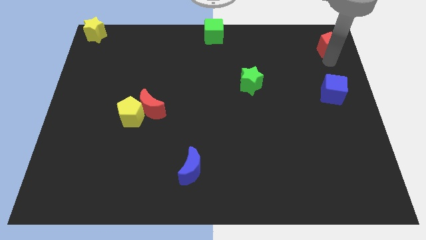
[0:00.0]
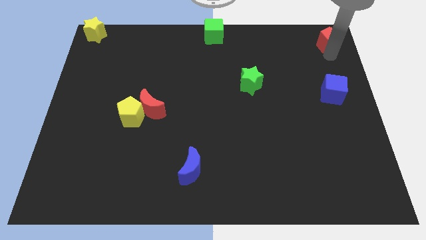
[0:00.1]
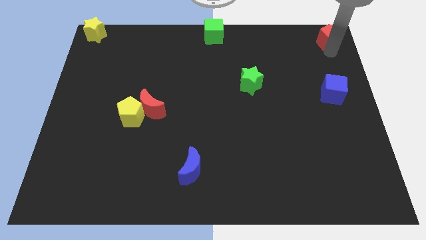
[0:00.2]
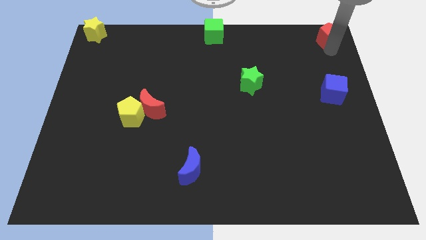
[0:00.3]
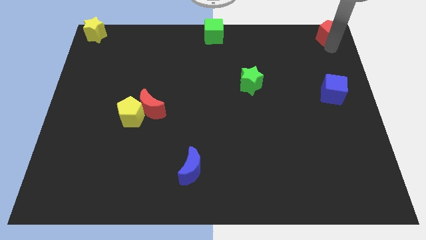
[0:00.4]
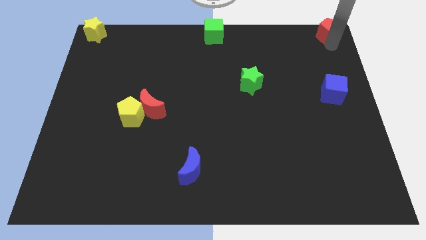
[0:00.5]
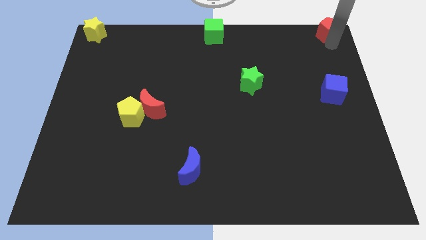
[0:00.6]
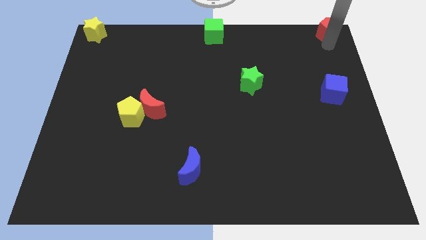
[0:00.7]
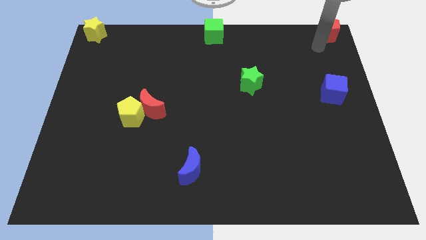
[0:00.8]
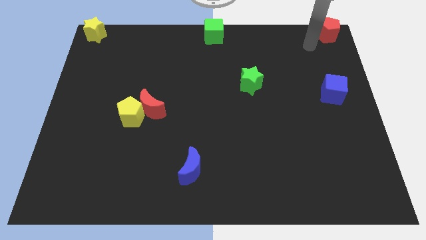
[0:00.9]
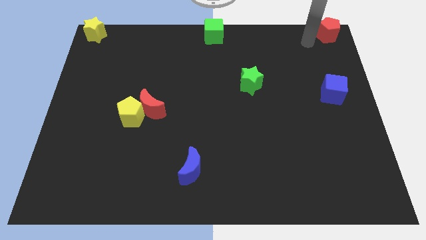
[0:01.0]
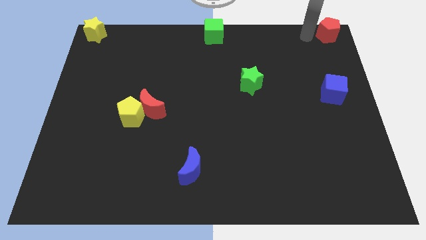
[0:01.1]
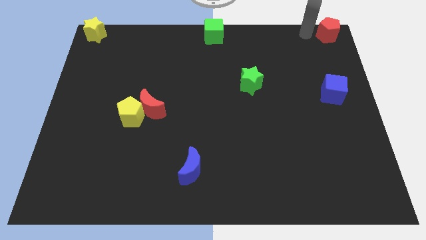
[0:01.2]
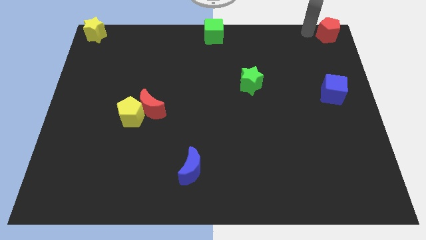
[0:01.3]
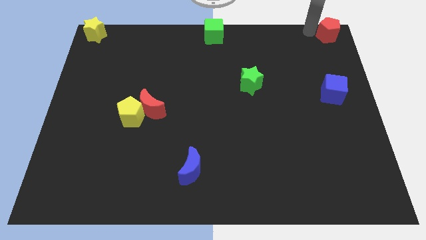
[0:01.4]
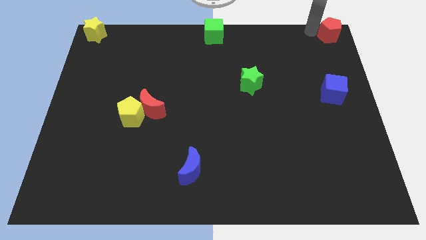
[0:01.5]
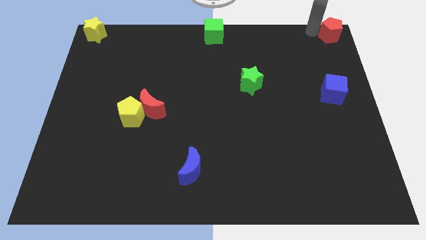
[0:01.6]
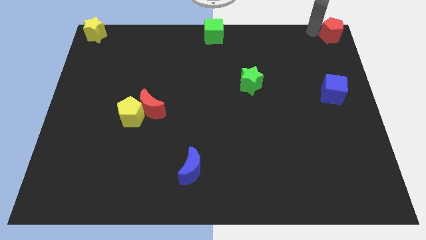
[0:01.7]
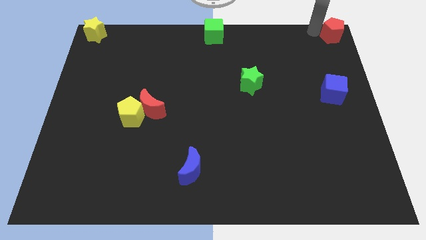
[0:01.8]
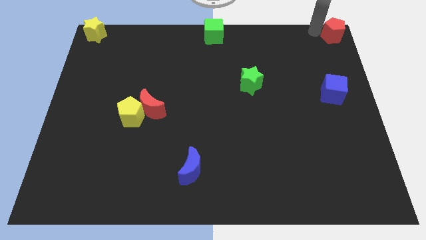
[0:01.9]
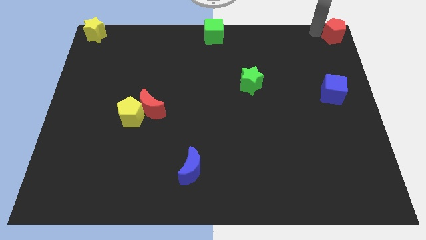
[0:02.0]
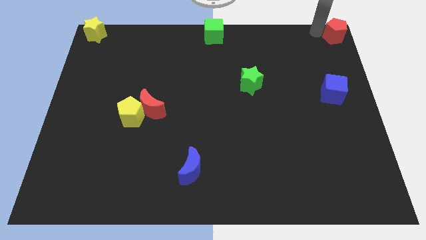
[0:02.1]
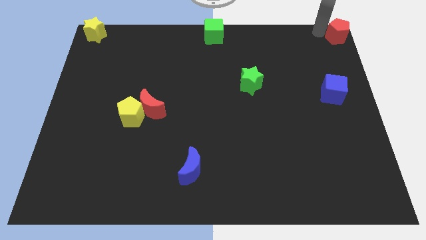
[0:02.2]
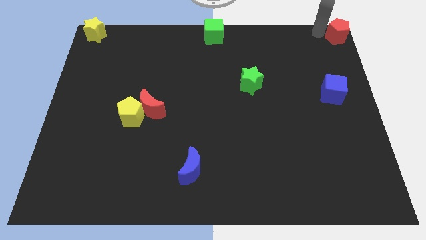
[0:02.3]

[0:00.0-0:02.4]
slide the red pentagon to the top right corner of the board

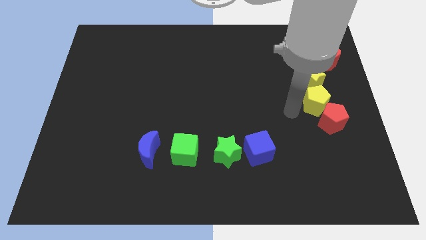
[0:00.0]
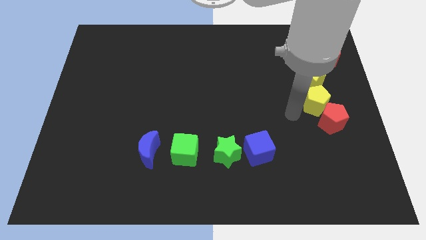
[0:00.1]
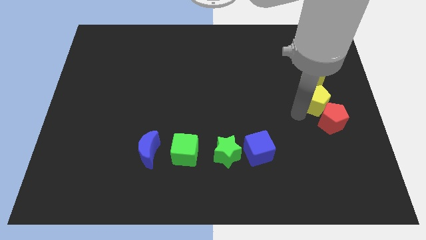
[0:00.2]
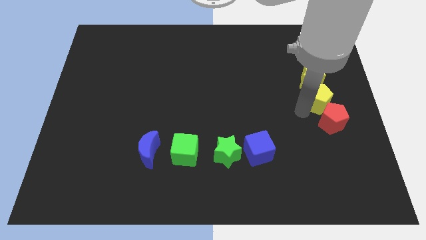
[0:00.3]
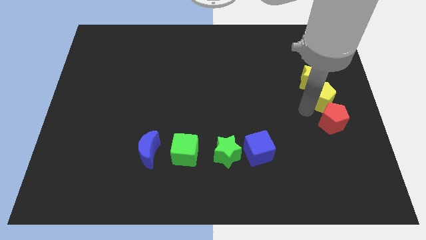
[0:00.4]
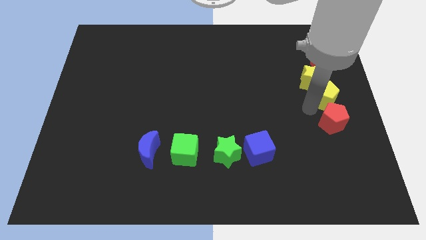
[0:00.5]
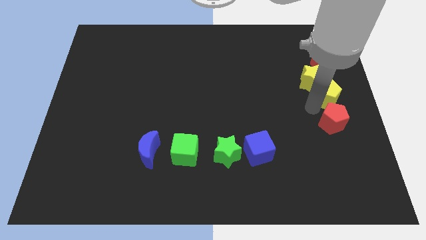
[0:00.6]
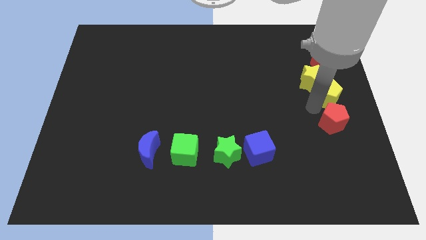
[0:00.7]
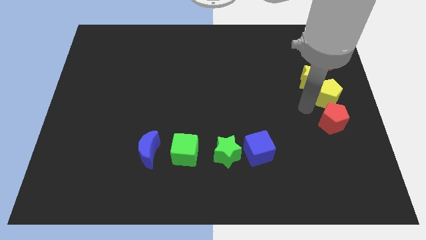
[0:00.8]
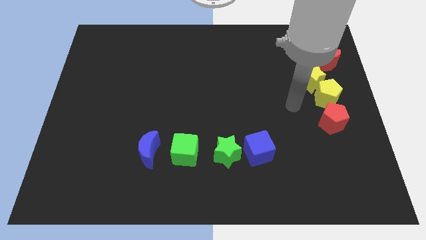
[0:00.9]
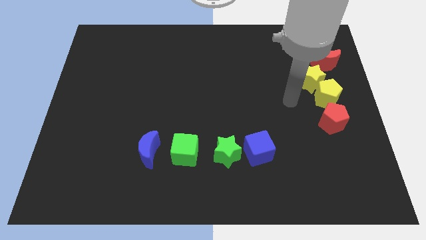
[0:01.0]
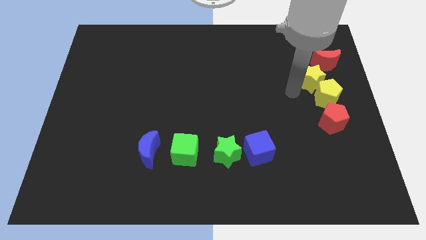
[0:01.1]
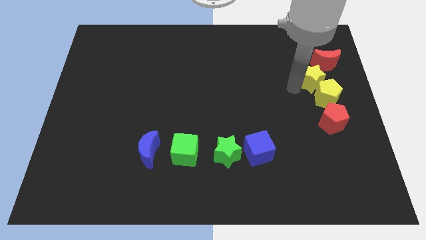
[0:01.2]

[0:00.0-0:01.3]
slightly push the yellow pentagon close to the red pentagon

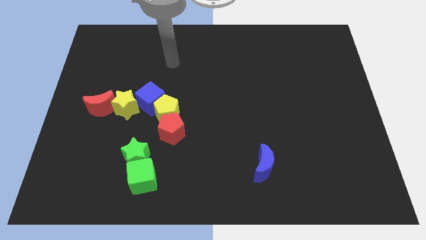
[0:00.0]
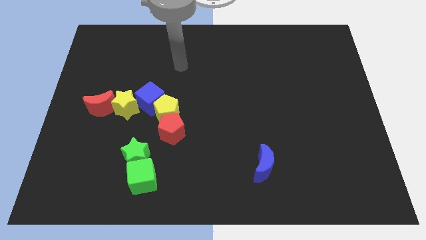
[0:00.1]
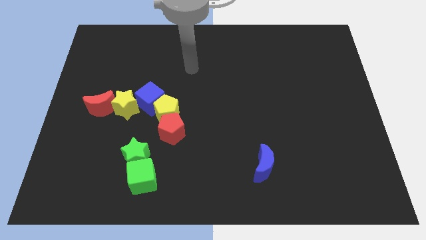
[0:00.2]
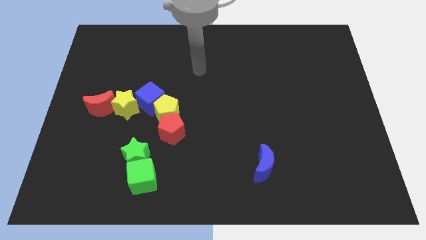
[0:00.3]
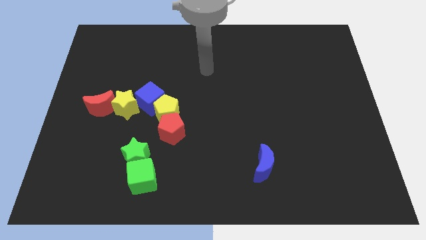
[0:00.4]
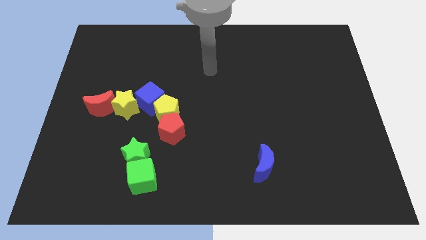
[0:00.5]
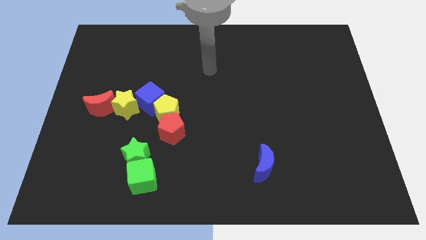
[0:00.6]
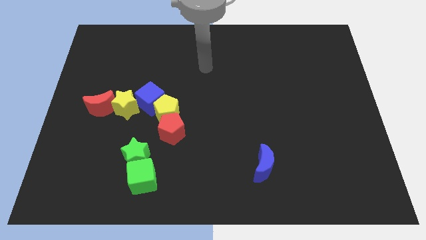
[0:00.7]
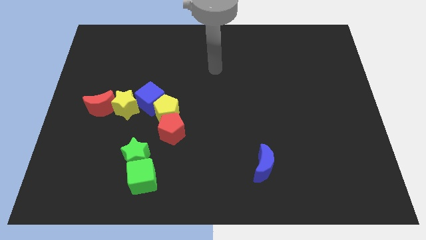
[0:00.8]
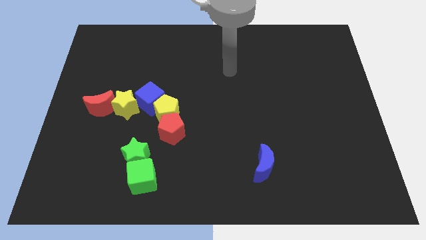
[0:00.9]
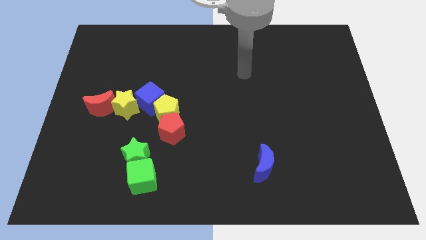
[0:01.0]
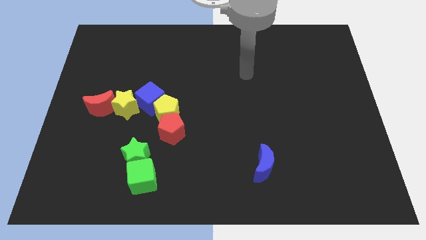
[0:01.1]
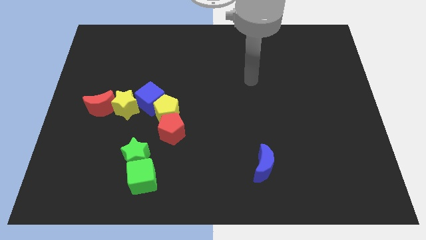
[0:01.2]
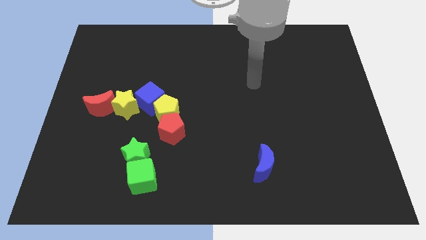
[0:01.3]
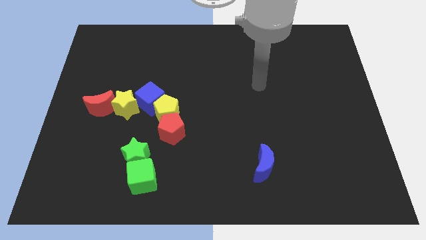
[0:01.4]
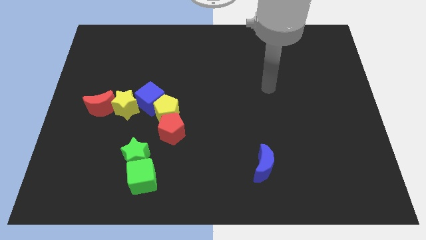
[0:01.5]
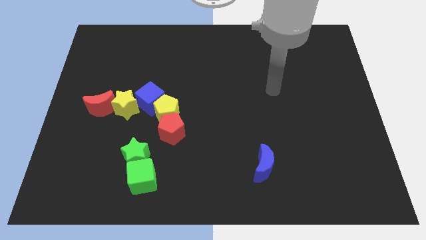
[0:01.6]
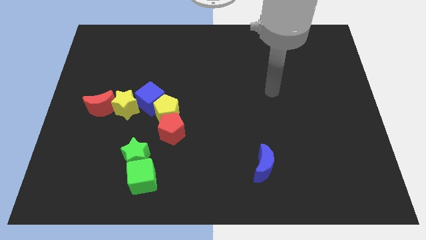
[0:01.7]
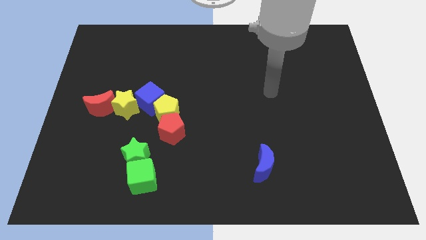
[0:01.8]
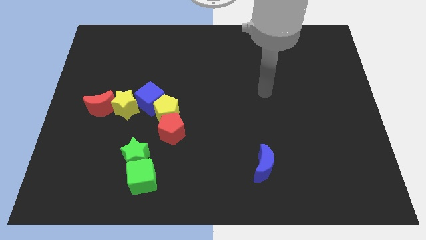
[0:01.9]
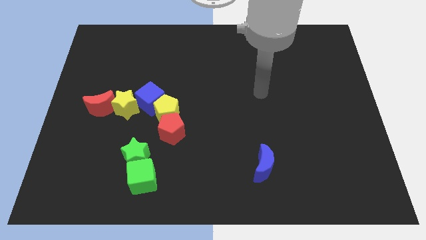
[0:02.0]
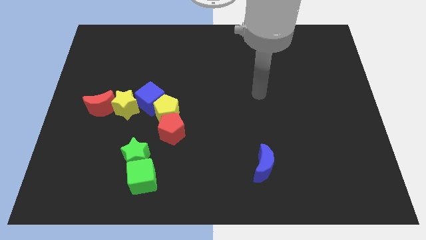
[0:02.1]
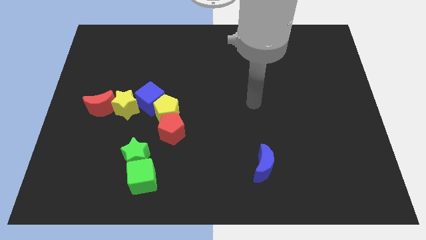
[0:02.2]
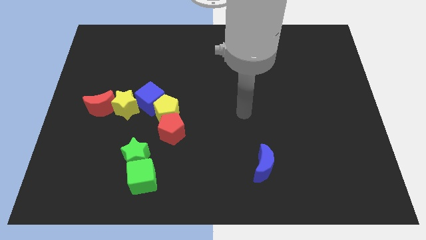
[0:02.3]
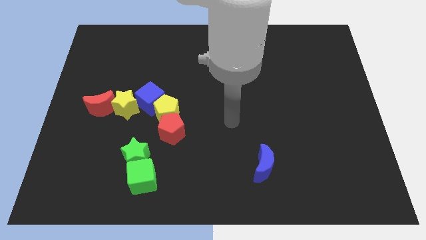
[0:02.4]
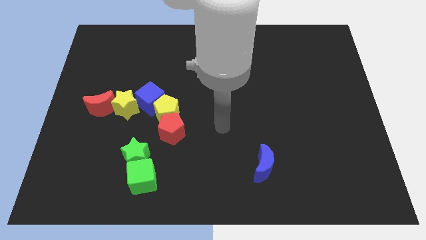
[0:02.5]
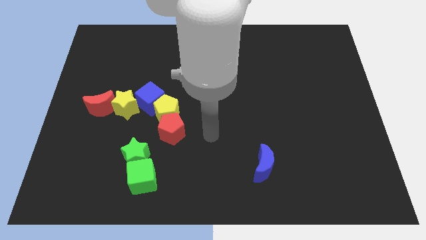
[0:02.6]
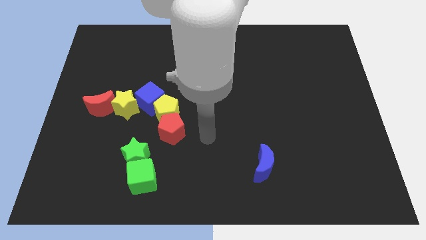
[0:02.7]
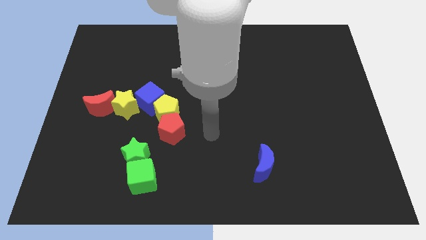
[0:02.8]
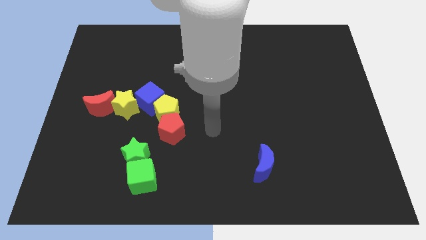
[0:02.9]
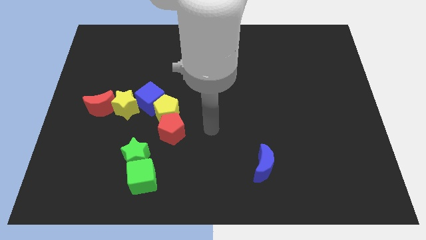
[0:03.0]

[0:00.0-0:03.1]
point your arm at the right side of the red pentagon

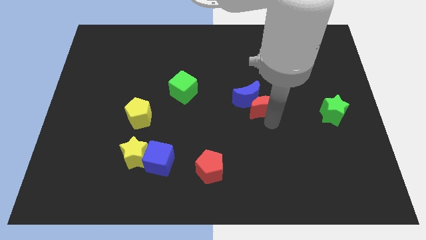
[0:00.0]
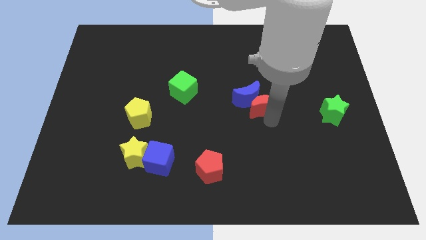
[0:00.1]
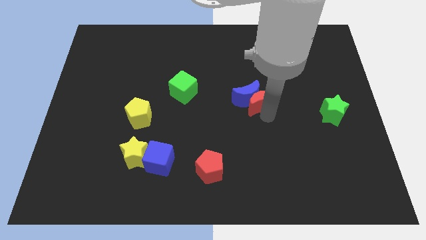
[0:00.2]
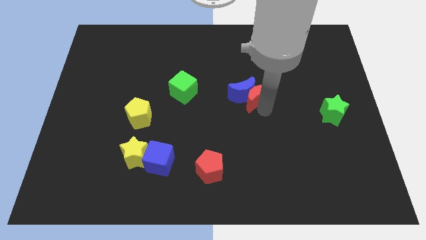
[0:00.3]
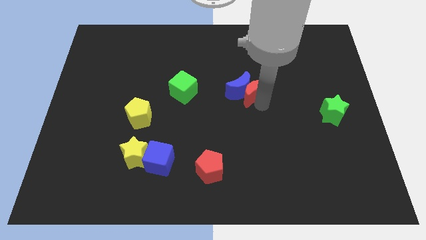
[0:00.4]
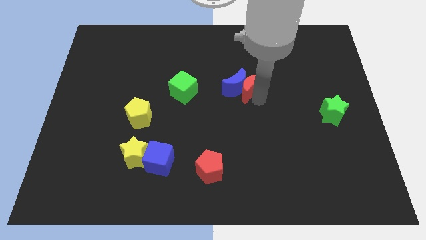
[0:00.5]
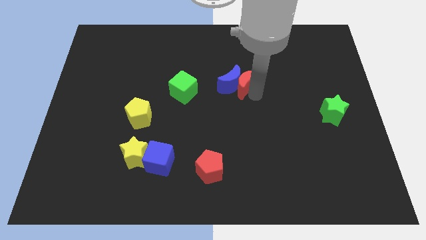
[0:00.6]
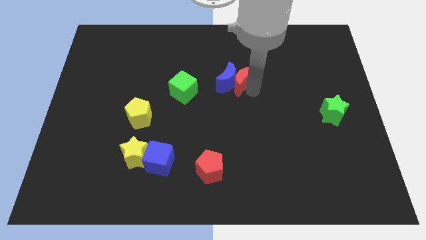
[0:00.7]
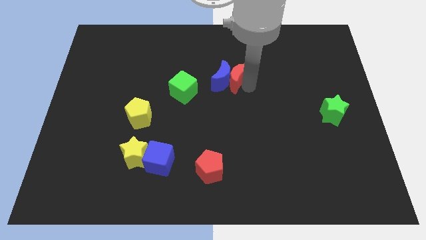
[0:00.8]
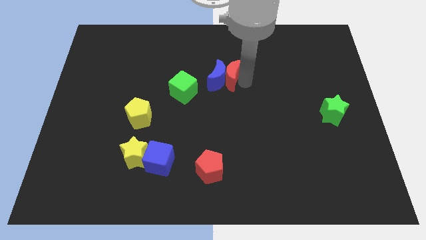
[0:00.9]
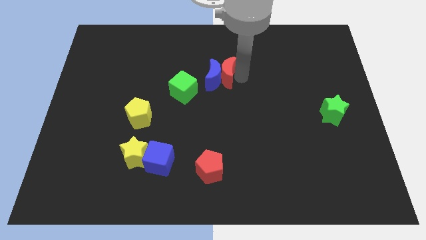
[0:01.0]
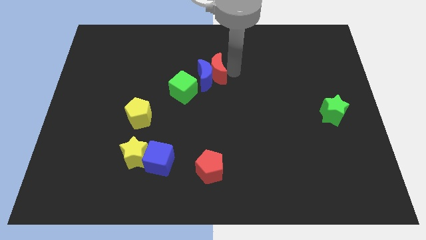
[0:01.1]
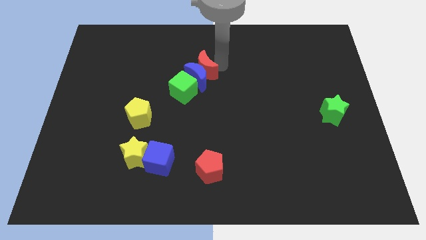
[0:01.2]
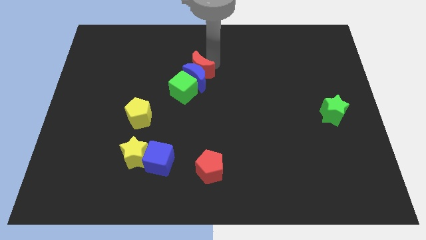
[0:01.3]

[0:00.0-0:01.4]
move the crescents into the green cube

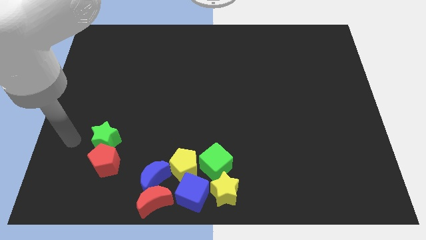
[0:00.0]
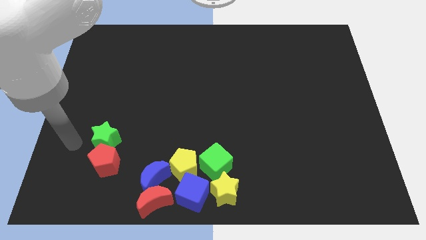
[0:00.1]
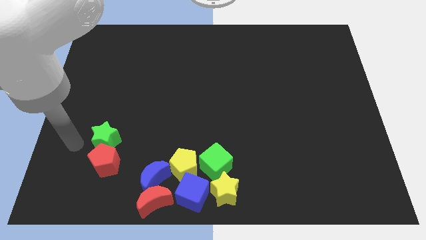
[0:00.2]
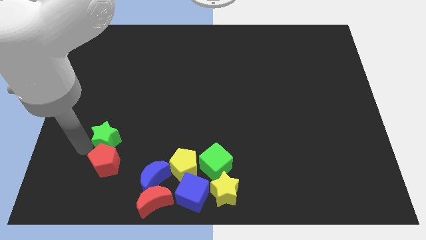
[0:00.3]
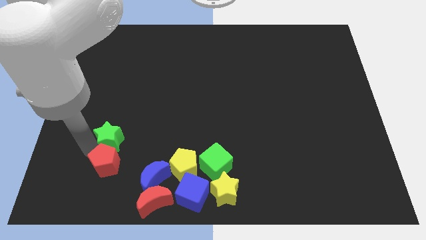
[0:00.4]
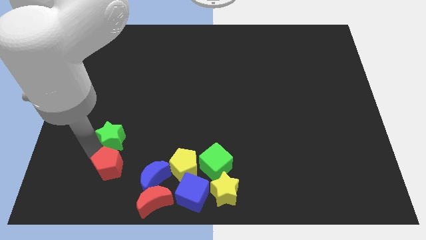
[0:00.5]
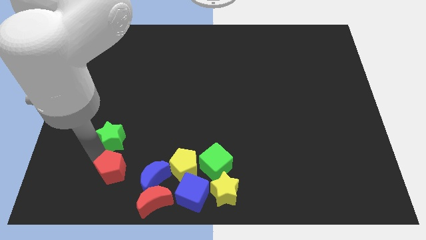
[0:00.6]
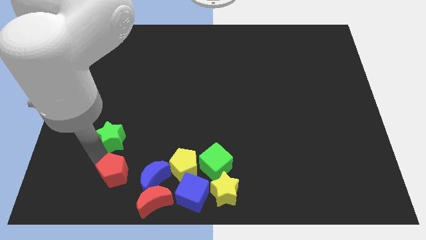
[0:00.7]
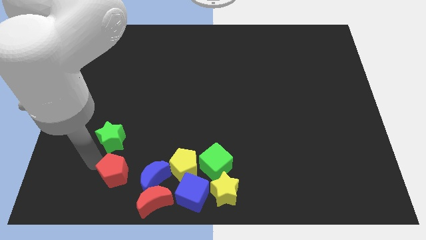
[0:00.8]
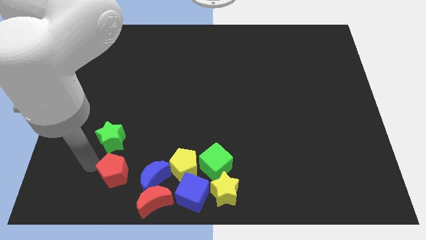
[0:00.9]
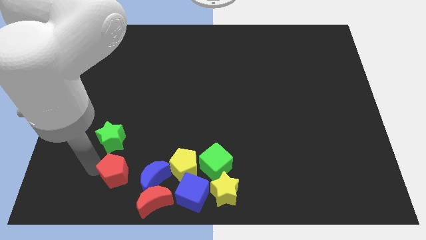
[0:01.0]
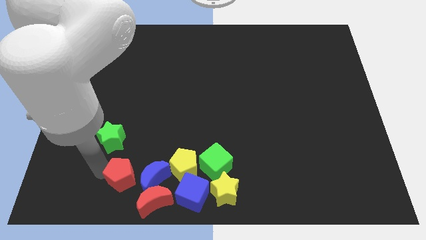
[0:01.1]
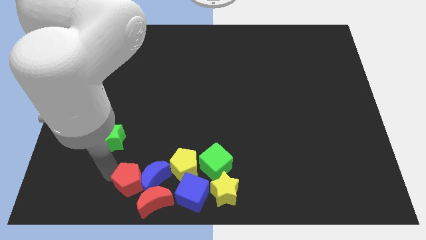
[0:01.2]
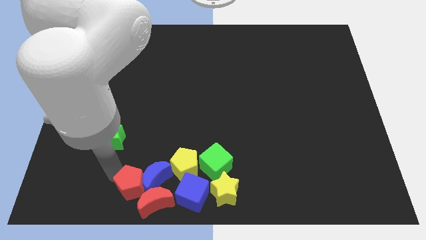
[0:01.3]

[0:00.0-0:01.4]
separate the red pentagon from the green star
